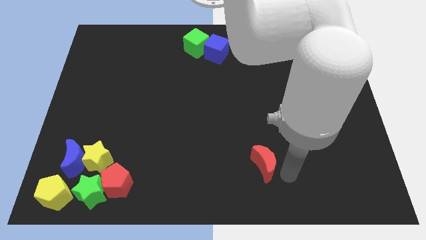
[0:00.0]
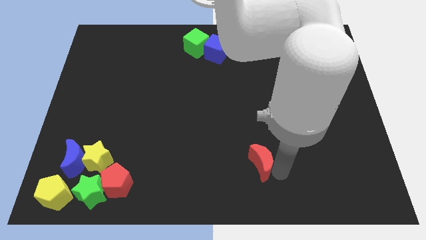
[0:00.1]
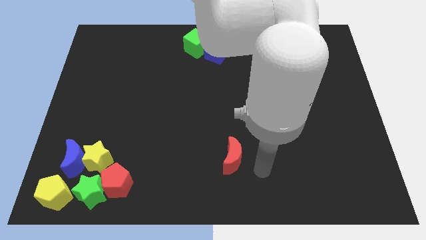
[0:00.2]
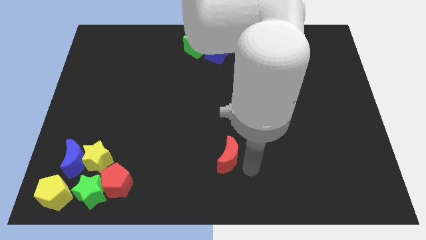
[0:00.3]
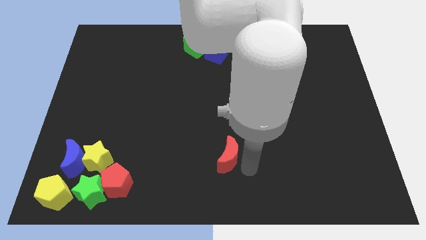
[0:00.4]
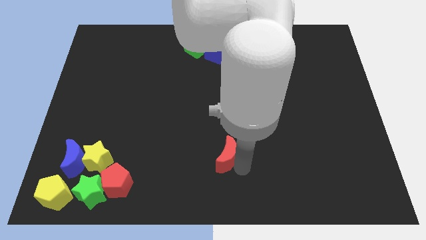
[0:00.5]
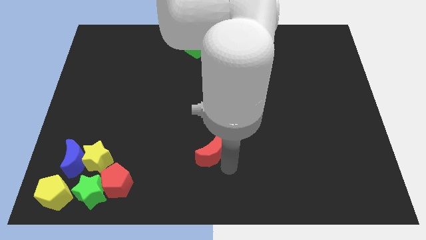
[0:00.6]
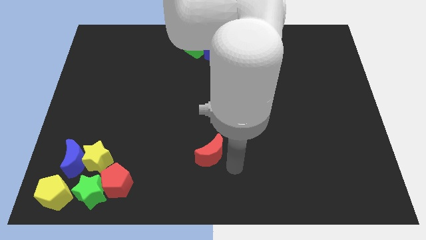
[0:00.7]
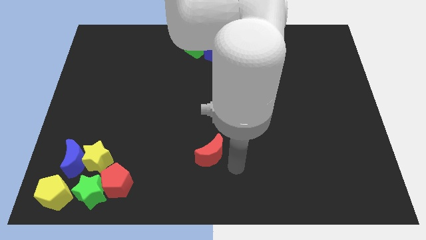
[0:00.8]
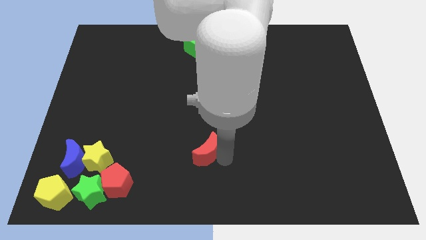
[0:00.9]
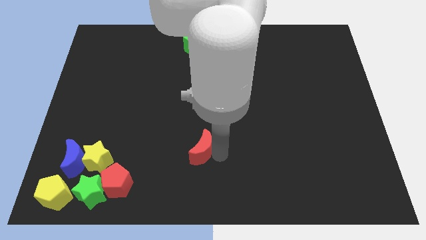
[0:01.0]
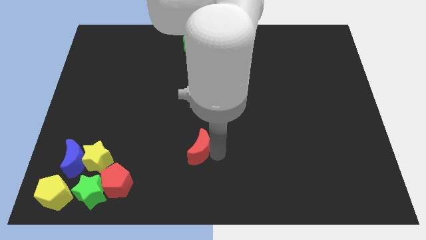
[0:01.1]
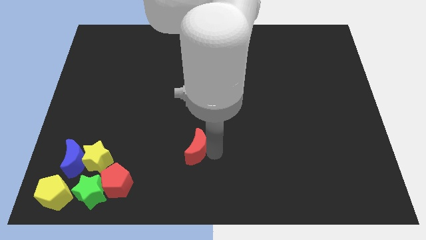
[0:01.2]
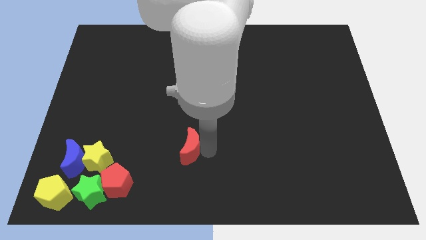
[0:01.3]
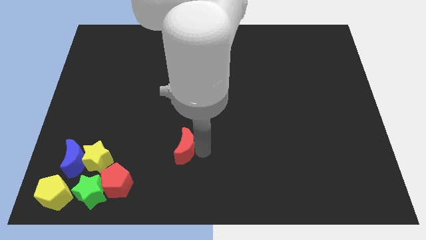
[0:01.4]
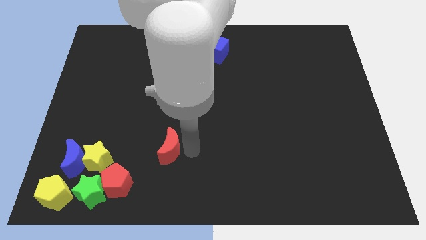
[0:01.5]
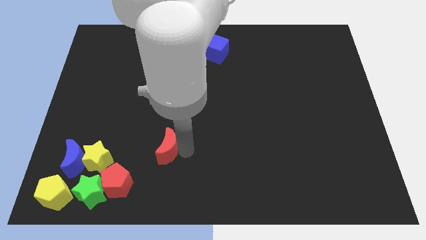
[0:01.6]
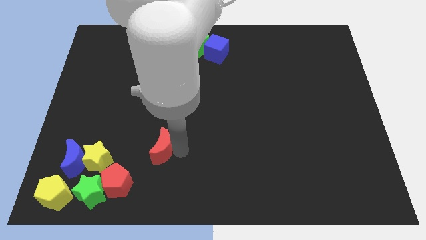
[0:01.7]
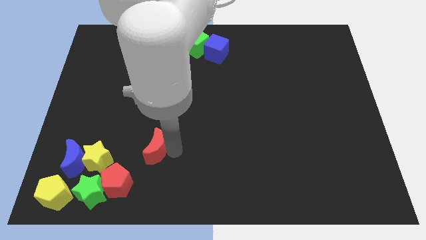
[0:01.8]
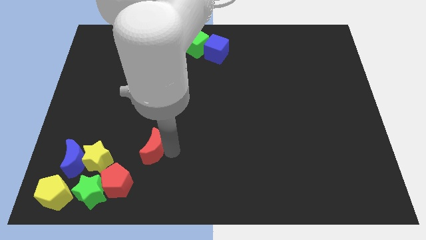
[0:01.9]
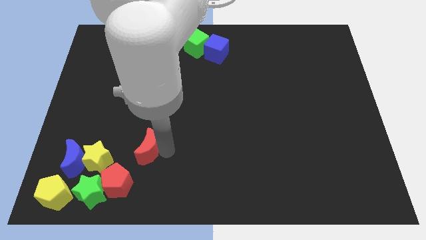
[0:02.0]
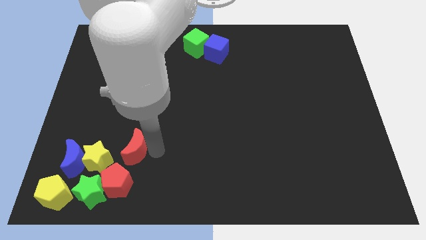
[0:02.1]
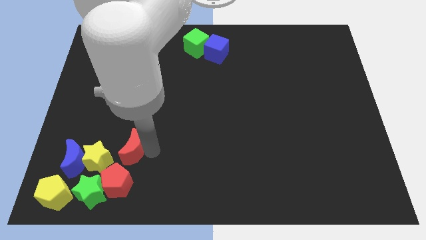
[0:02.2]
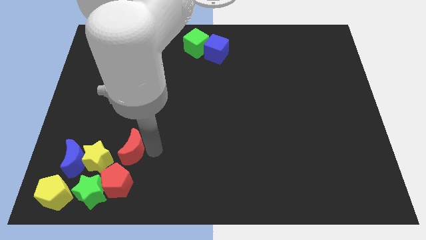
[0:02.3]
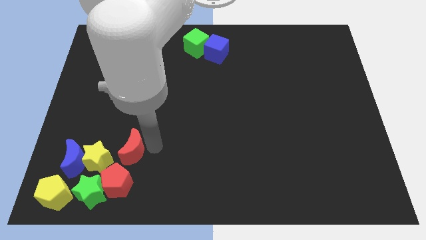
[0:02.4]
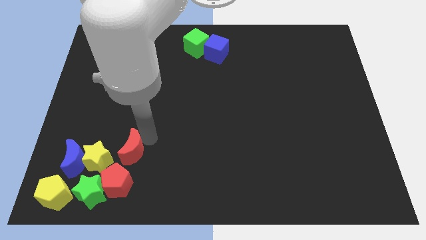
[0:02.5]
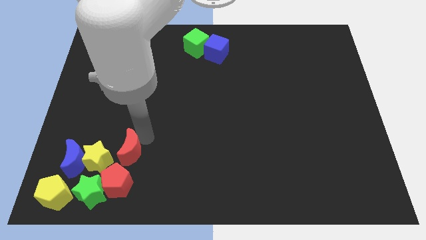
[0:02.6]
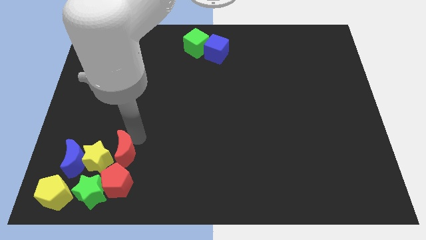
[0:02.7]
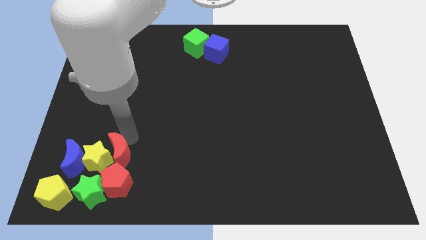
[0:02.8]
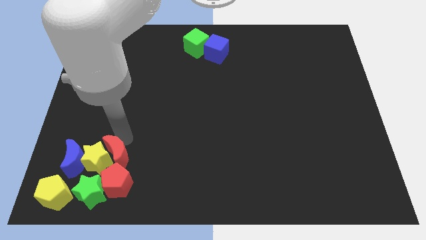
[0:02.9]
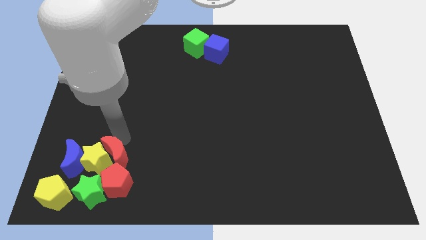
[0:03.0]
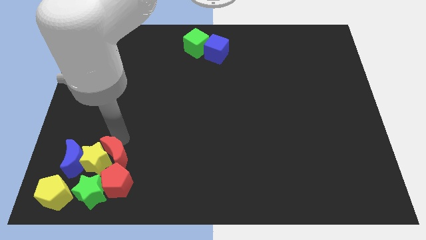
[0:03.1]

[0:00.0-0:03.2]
push the red crescent into the yellow star

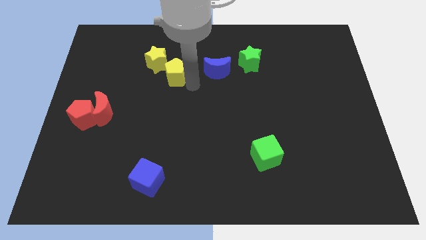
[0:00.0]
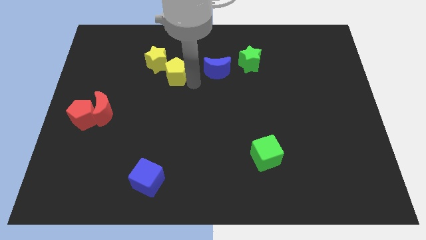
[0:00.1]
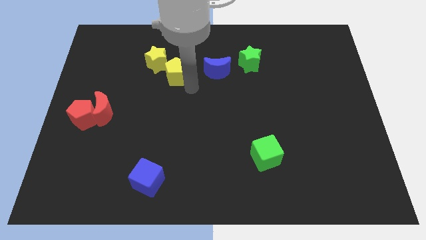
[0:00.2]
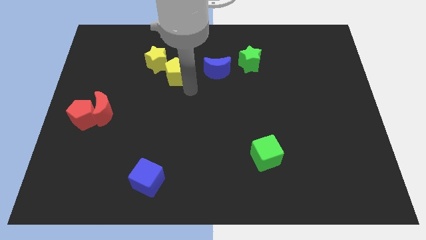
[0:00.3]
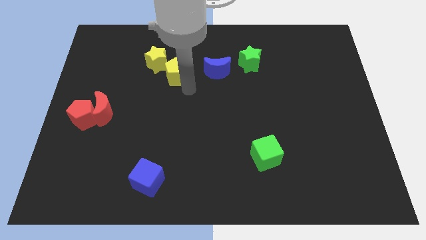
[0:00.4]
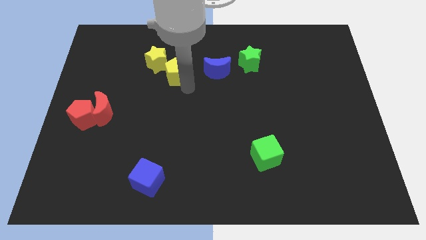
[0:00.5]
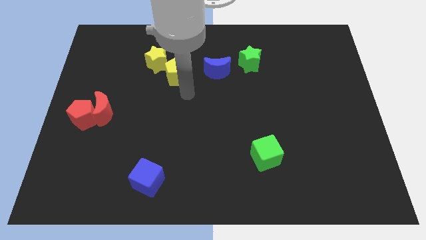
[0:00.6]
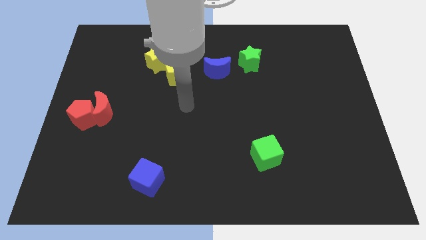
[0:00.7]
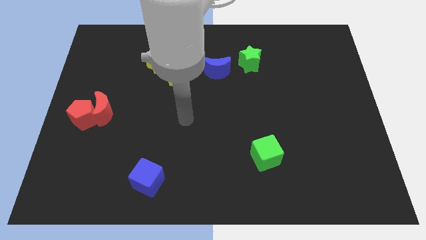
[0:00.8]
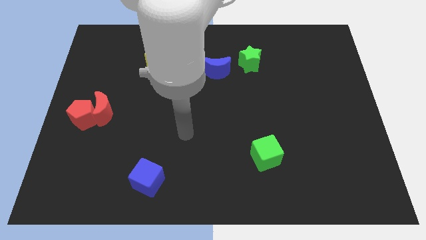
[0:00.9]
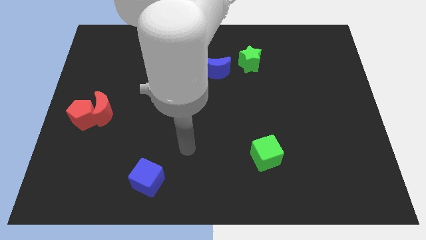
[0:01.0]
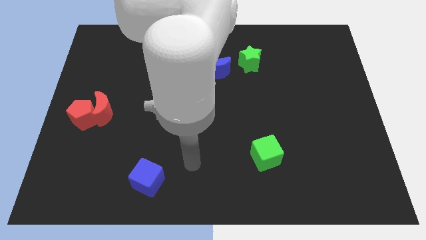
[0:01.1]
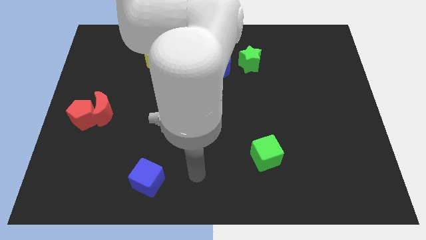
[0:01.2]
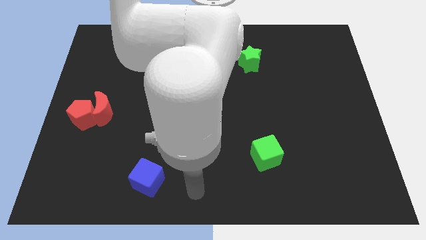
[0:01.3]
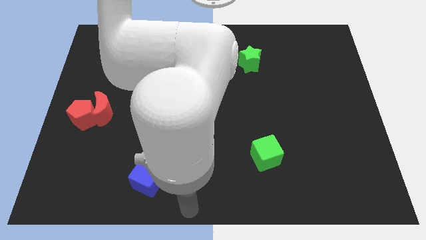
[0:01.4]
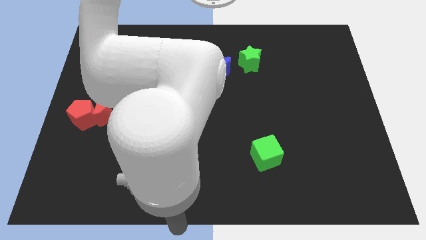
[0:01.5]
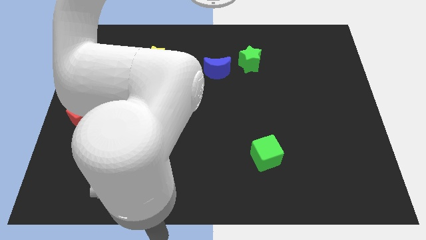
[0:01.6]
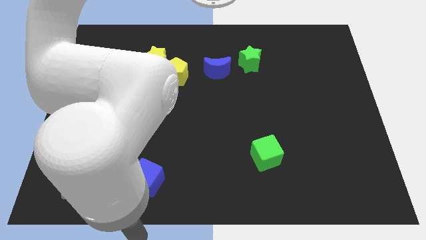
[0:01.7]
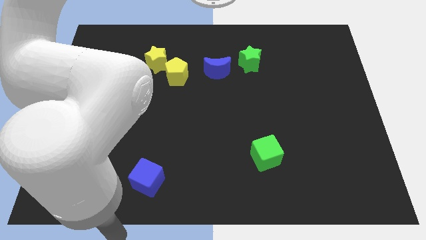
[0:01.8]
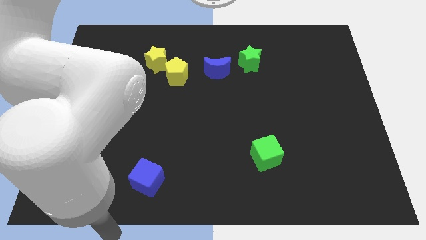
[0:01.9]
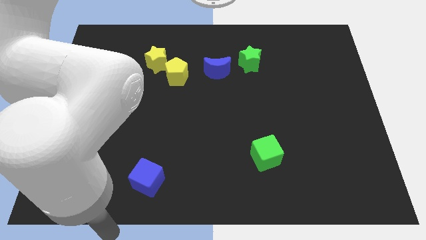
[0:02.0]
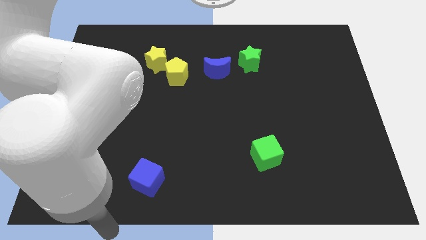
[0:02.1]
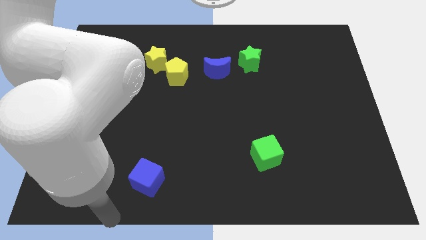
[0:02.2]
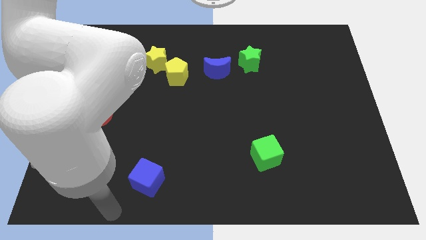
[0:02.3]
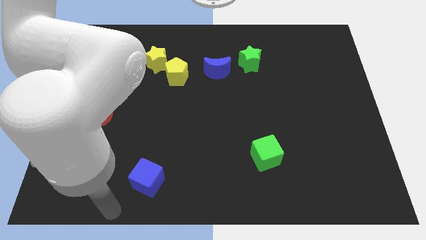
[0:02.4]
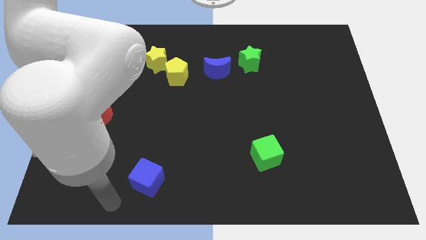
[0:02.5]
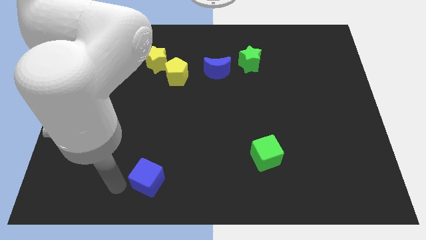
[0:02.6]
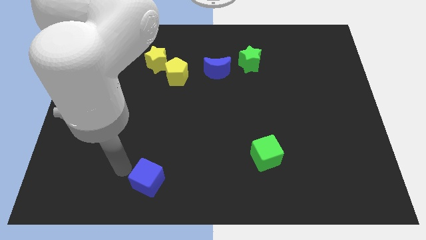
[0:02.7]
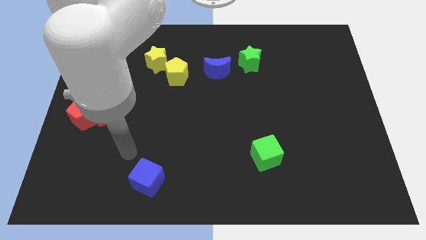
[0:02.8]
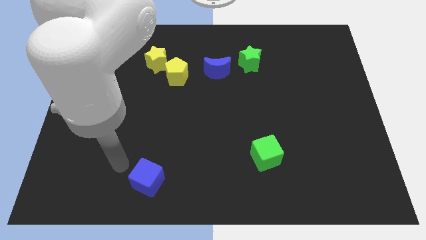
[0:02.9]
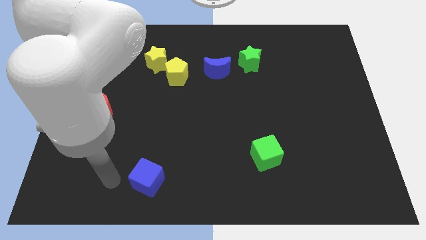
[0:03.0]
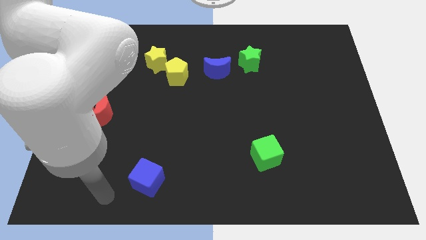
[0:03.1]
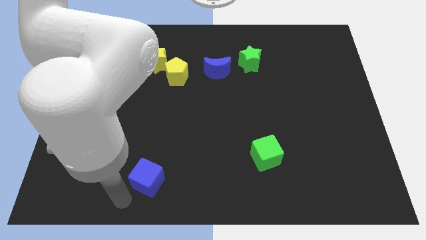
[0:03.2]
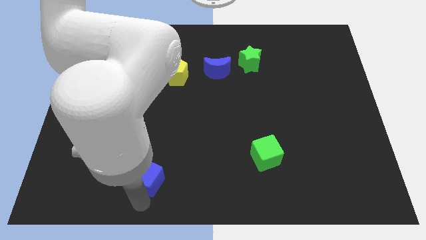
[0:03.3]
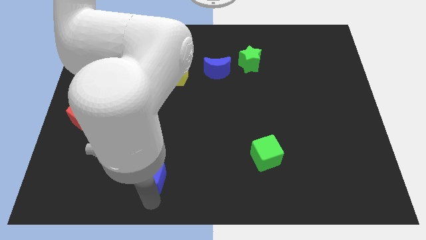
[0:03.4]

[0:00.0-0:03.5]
move the arm towards the bottom of the blue cube

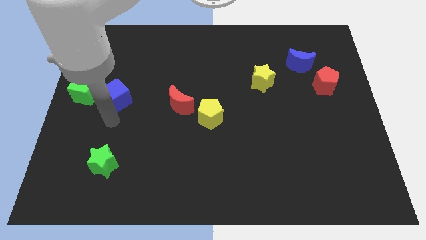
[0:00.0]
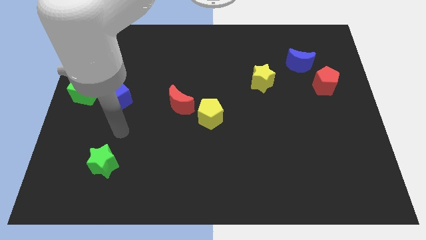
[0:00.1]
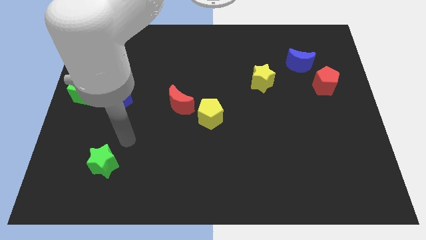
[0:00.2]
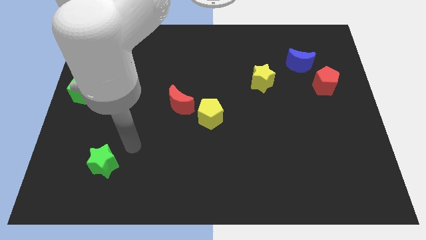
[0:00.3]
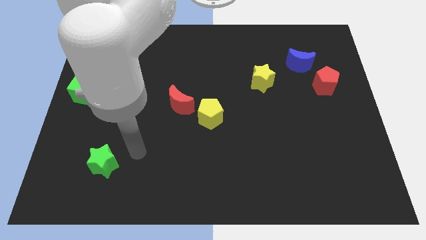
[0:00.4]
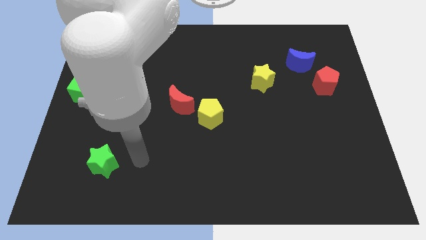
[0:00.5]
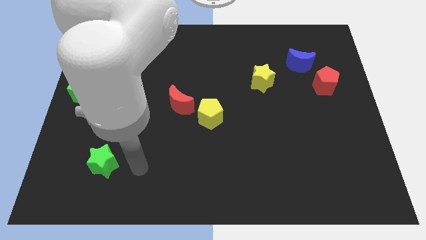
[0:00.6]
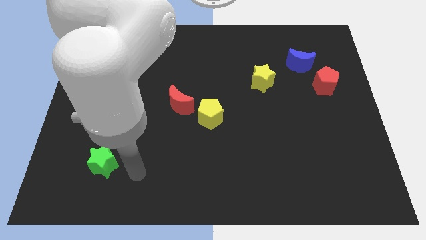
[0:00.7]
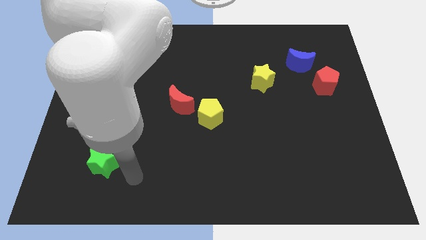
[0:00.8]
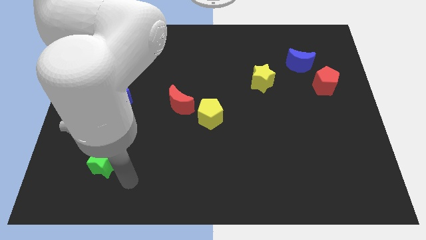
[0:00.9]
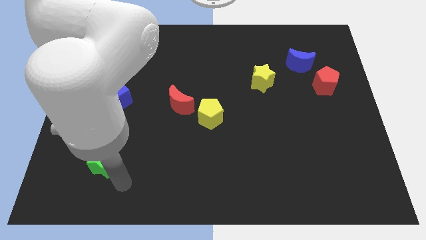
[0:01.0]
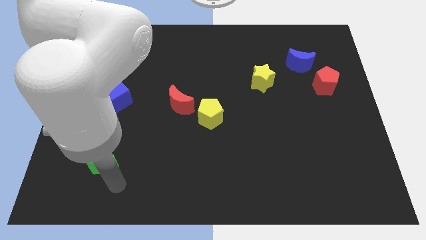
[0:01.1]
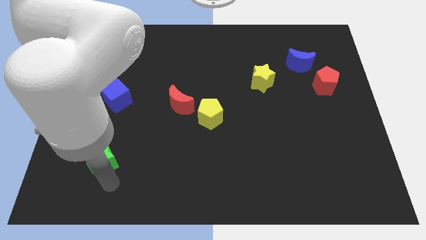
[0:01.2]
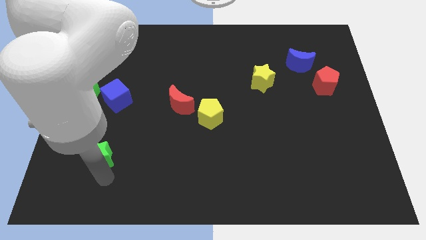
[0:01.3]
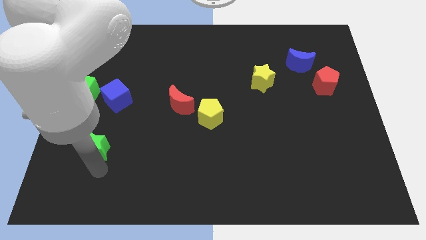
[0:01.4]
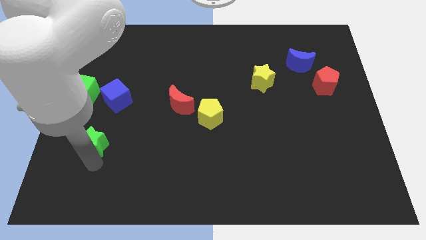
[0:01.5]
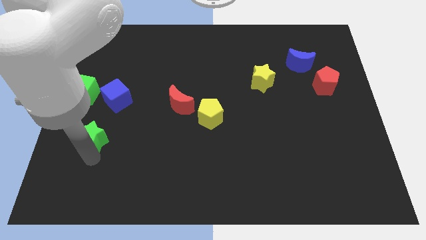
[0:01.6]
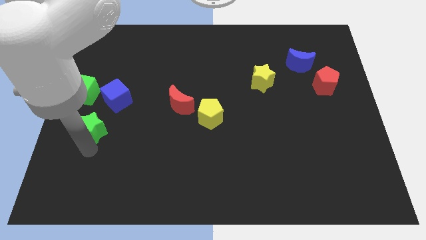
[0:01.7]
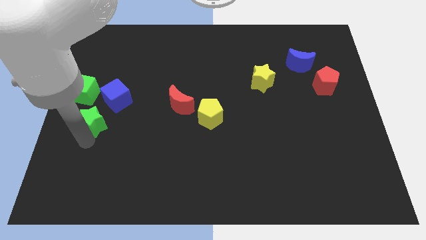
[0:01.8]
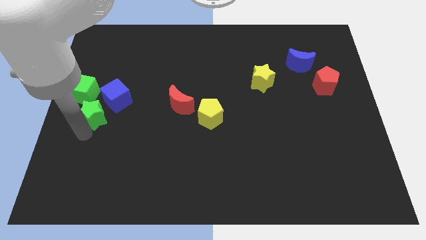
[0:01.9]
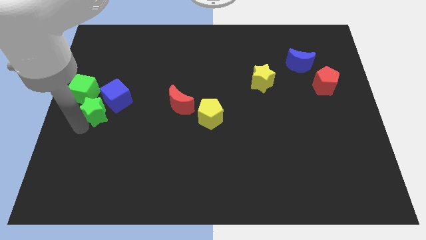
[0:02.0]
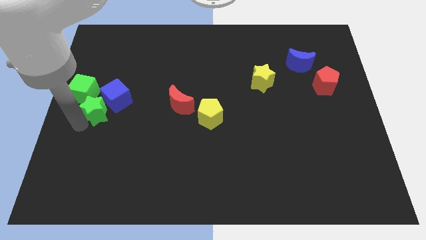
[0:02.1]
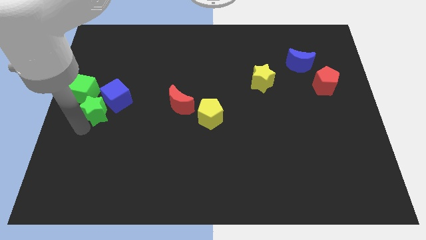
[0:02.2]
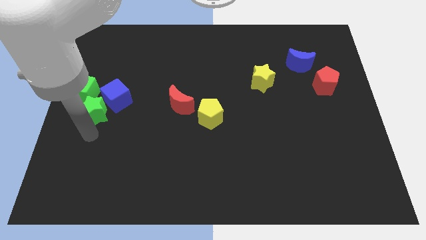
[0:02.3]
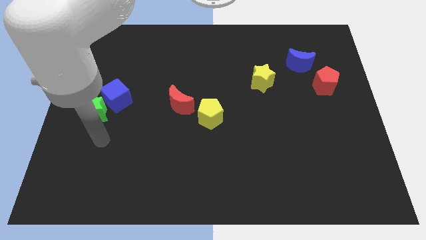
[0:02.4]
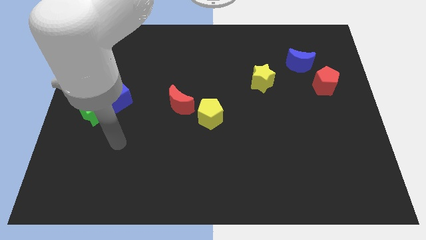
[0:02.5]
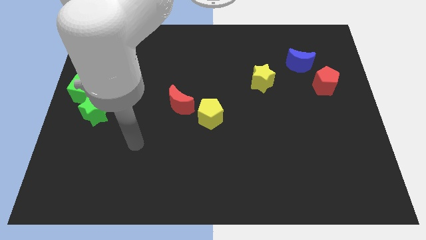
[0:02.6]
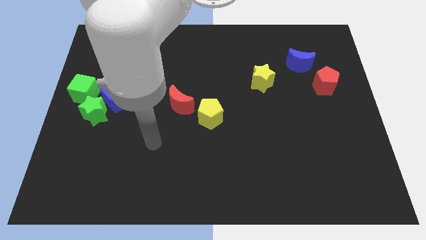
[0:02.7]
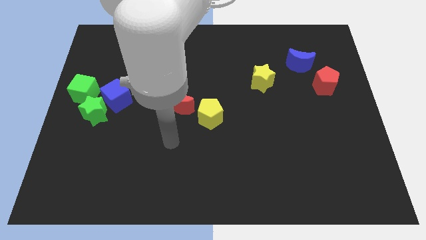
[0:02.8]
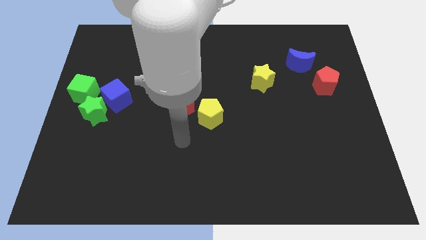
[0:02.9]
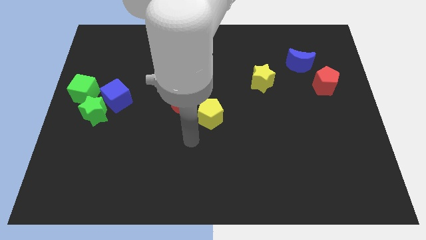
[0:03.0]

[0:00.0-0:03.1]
push the green star to the center left of the board
